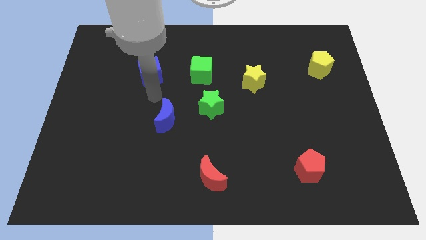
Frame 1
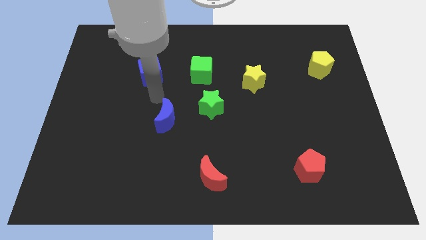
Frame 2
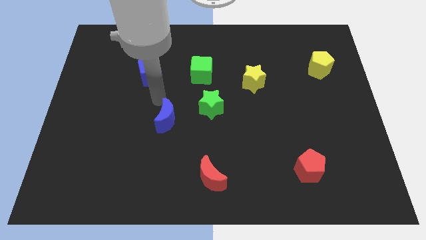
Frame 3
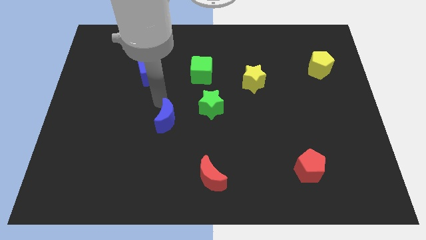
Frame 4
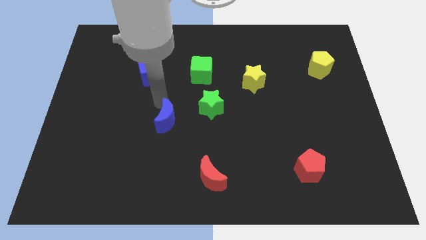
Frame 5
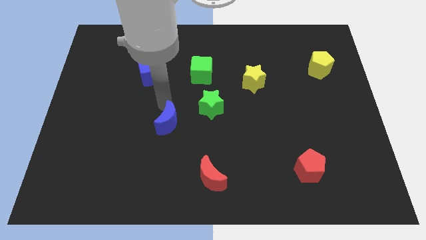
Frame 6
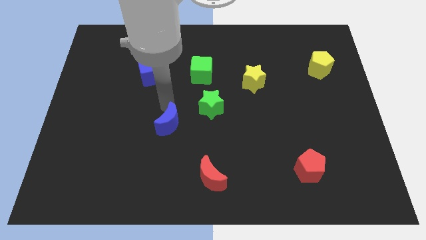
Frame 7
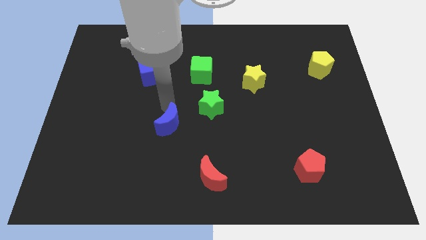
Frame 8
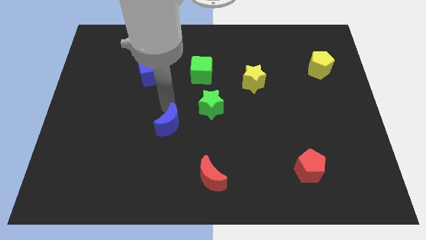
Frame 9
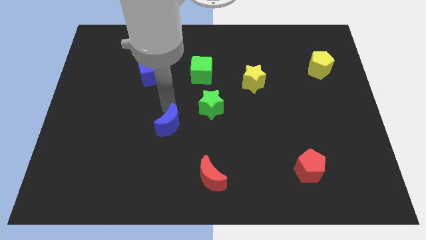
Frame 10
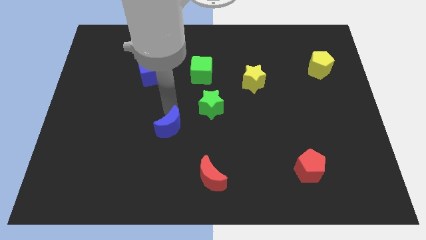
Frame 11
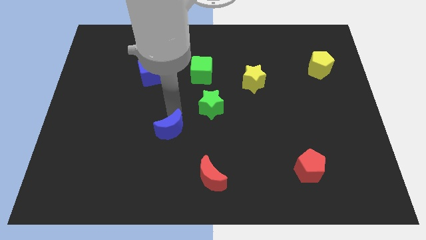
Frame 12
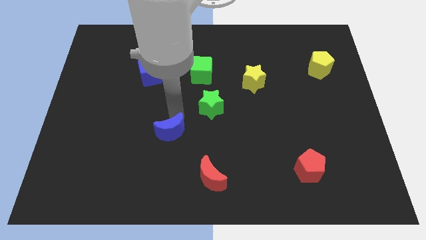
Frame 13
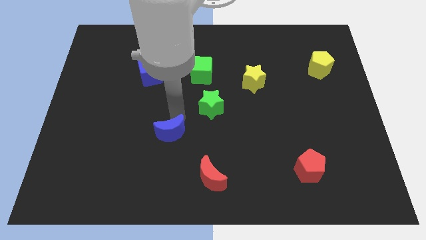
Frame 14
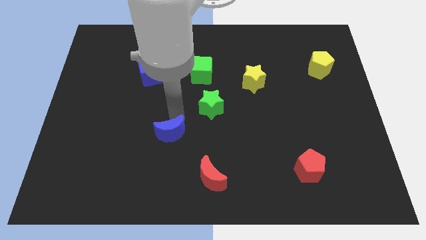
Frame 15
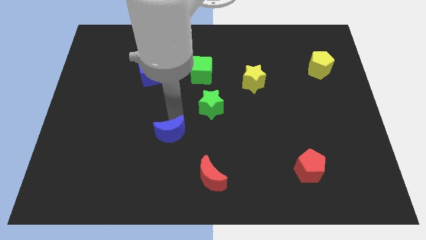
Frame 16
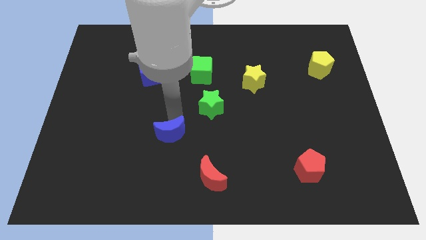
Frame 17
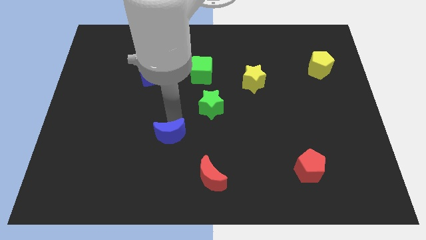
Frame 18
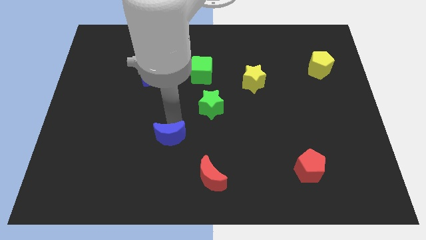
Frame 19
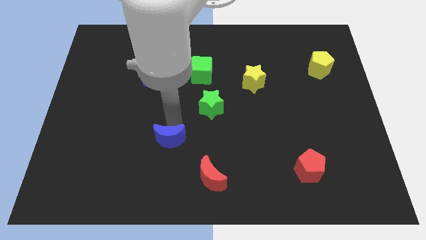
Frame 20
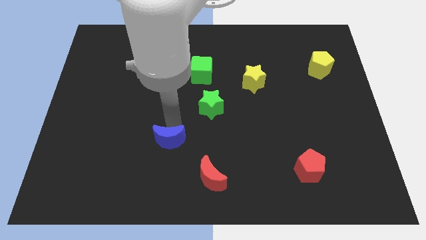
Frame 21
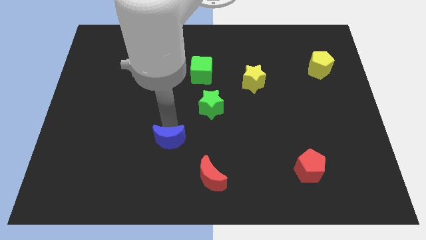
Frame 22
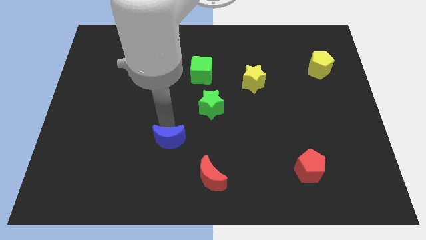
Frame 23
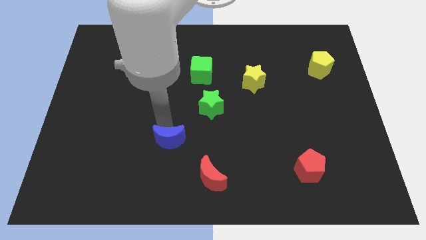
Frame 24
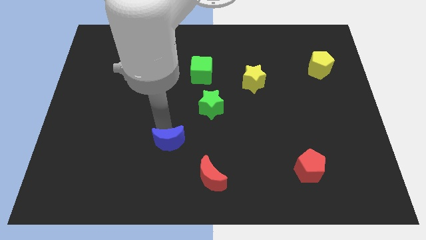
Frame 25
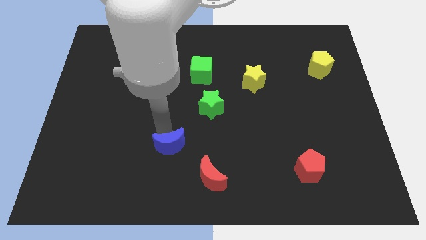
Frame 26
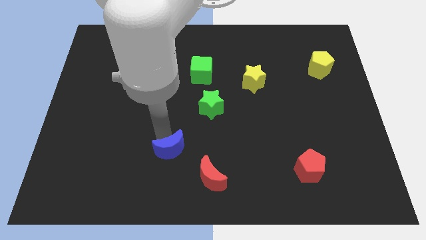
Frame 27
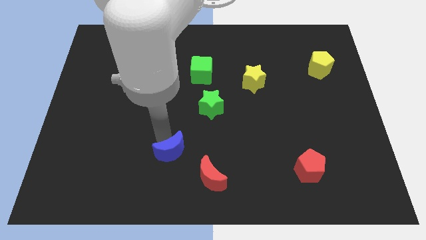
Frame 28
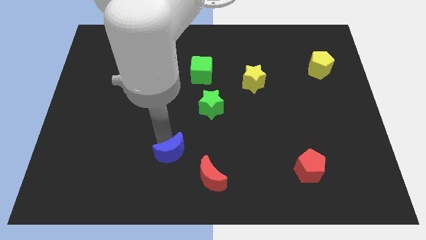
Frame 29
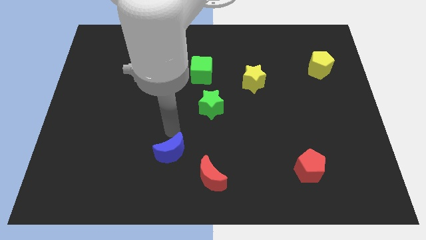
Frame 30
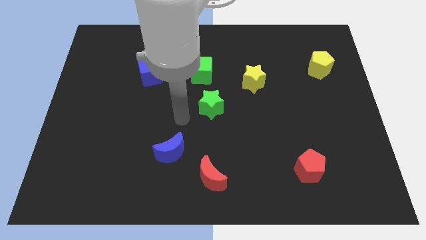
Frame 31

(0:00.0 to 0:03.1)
place blue moon diagonal to the red moon

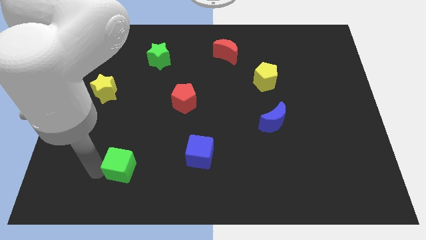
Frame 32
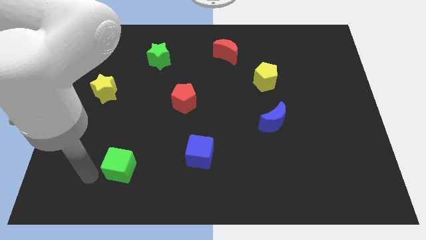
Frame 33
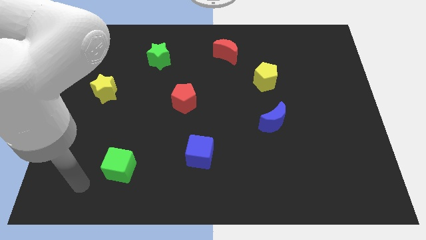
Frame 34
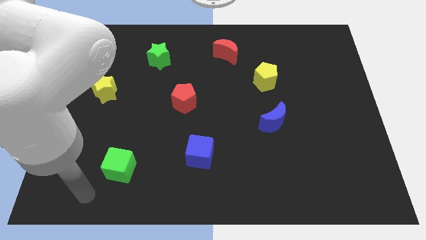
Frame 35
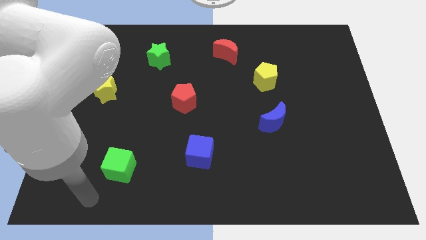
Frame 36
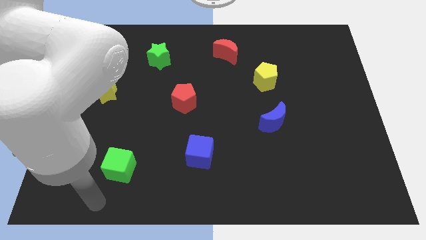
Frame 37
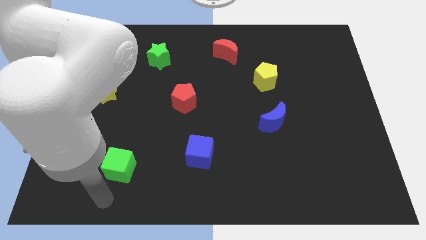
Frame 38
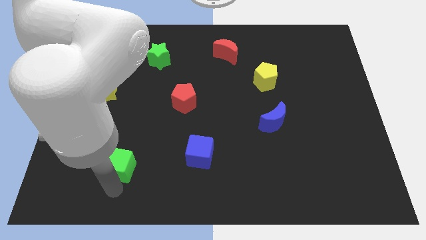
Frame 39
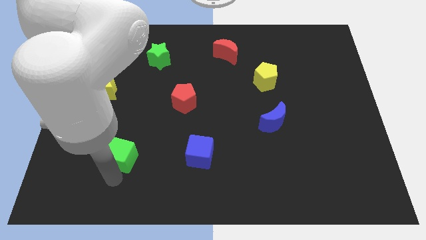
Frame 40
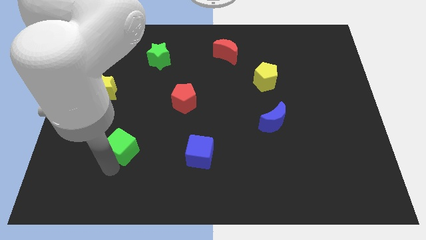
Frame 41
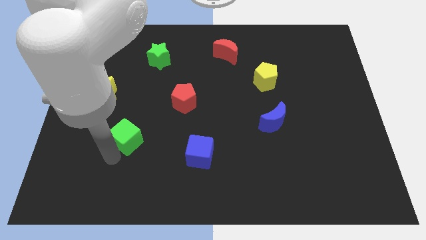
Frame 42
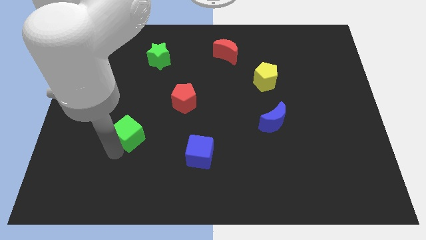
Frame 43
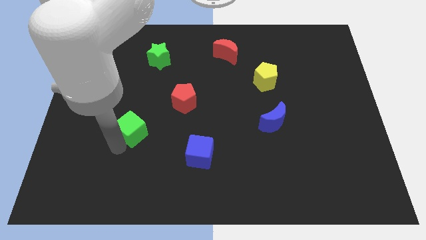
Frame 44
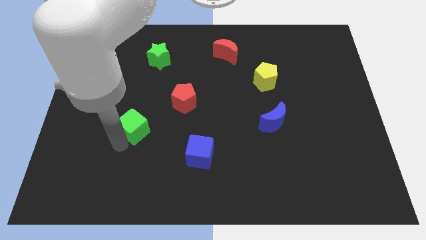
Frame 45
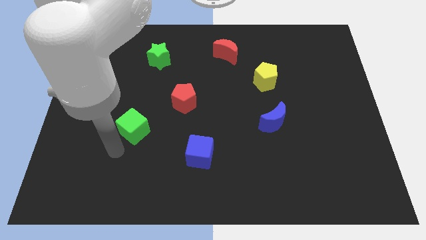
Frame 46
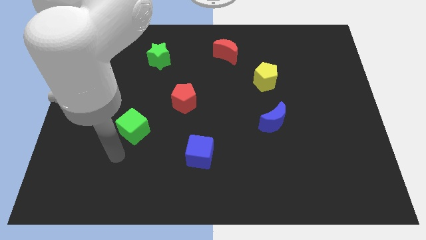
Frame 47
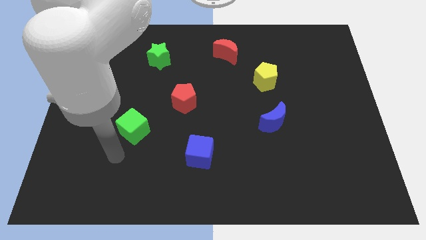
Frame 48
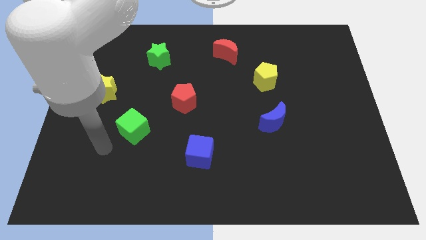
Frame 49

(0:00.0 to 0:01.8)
push the green cube towards red pentagon

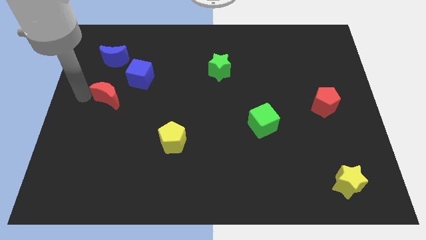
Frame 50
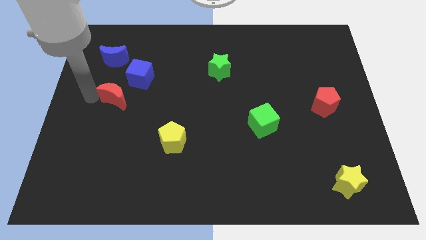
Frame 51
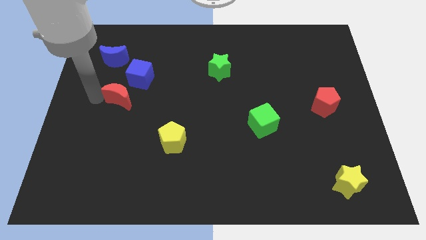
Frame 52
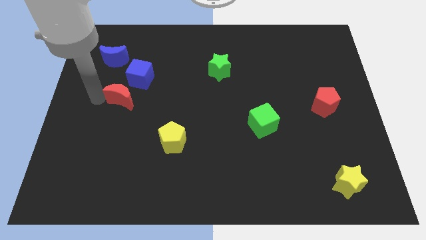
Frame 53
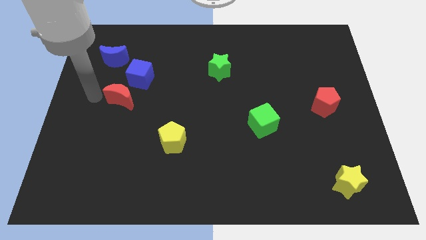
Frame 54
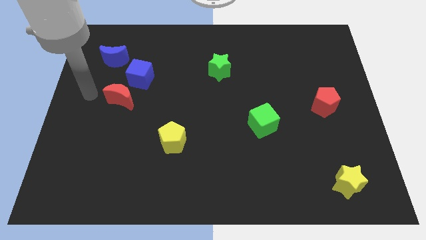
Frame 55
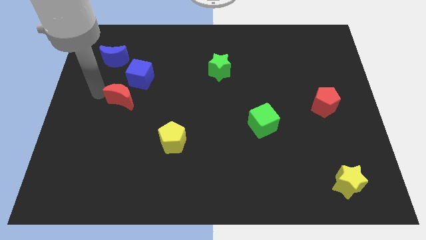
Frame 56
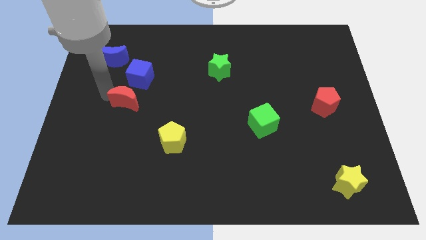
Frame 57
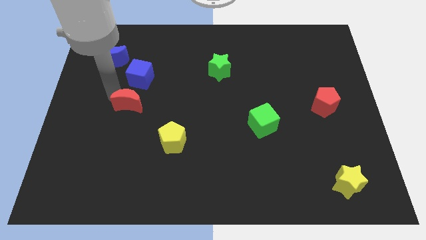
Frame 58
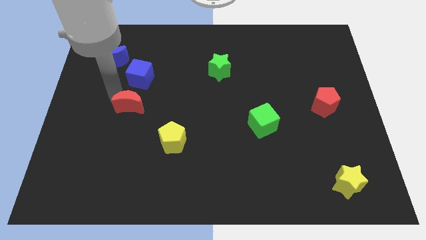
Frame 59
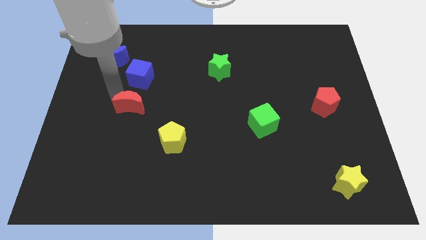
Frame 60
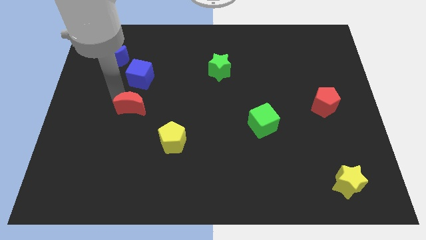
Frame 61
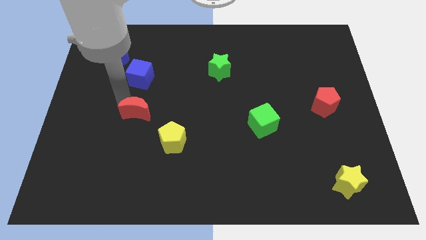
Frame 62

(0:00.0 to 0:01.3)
place the red moon below the blue cube

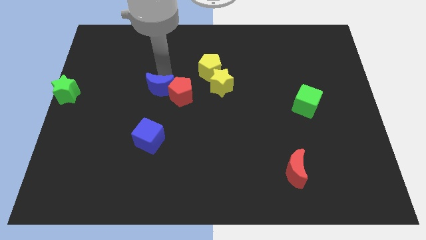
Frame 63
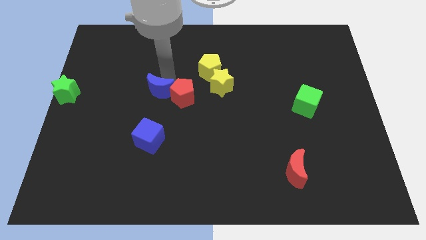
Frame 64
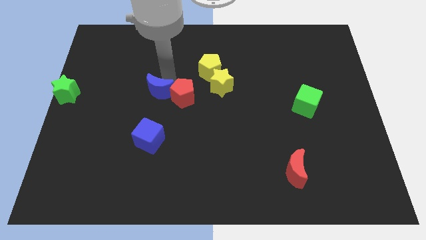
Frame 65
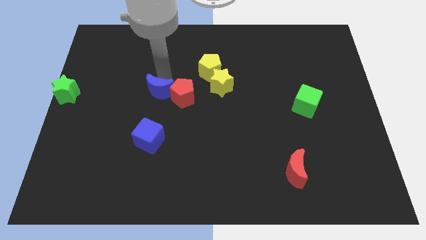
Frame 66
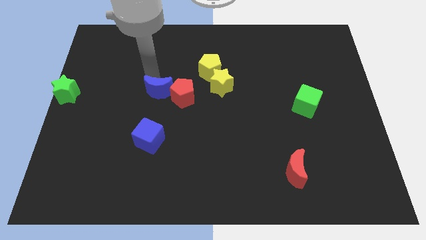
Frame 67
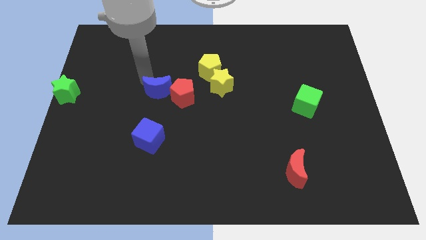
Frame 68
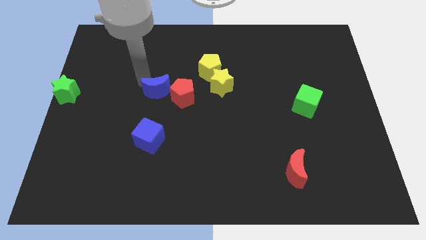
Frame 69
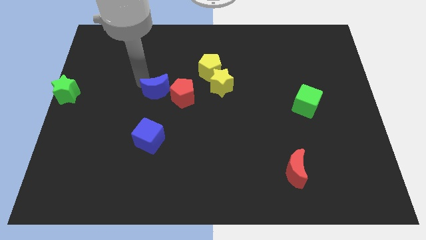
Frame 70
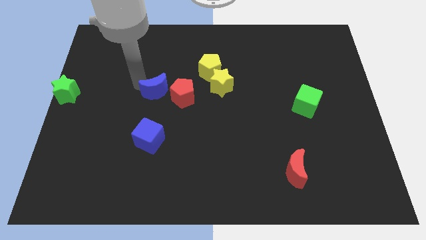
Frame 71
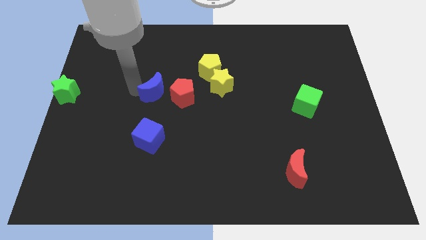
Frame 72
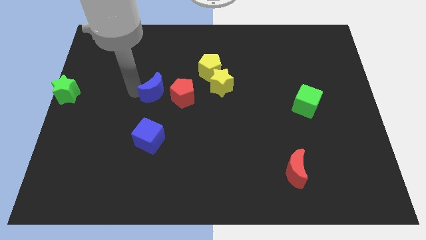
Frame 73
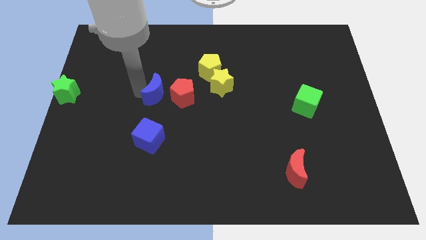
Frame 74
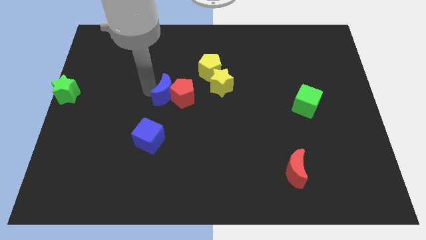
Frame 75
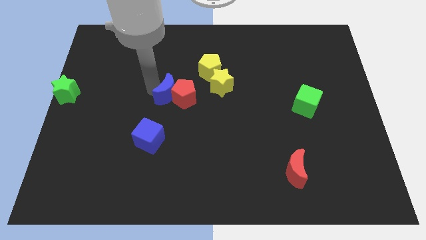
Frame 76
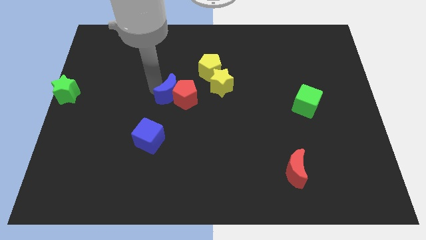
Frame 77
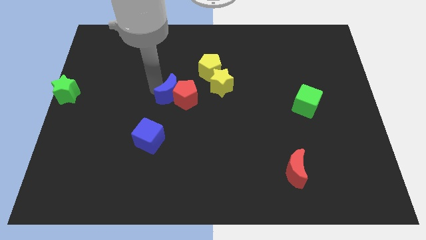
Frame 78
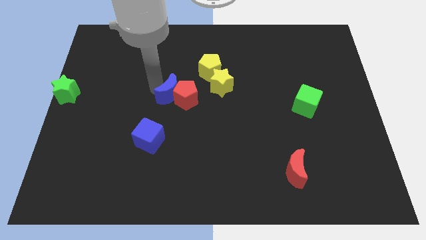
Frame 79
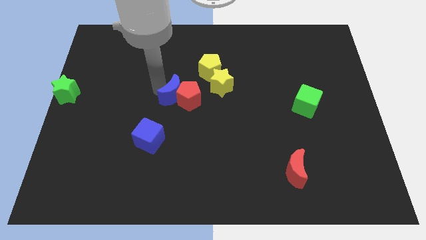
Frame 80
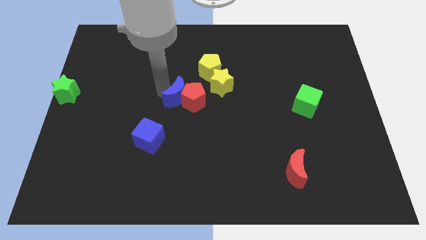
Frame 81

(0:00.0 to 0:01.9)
move the blue moon and red pentagon to the top right side of the blue cube

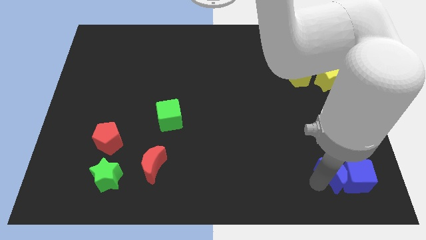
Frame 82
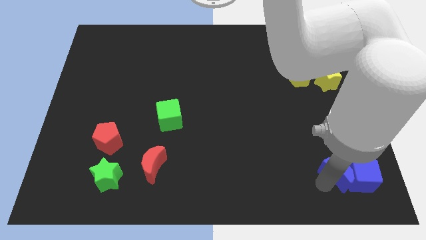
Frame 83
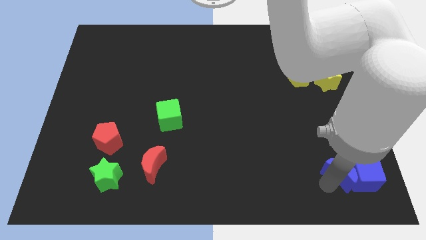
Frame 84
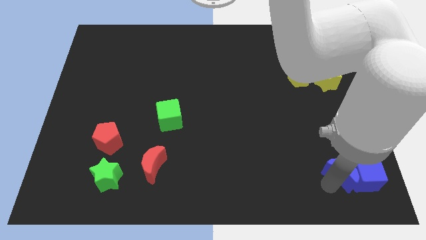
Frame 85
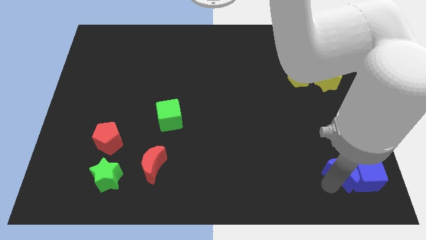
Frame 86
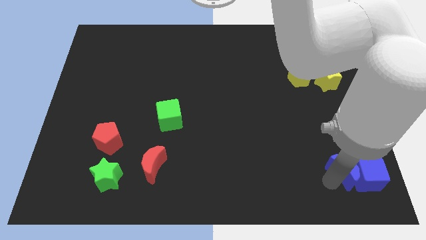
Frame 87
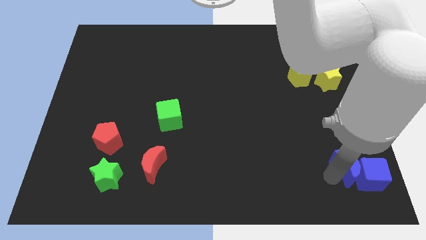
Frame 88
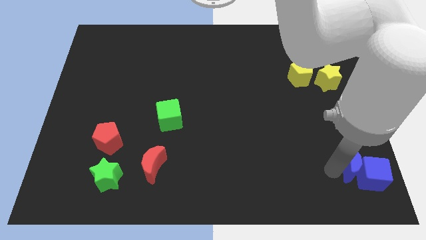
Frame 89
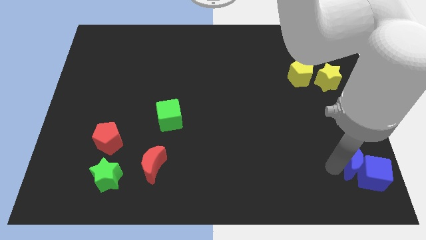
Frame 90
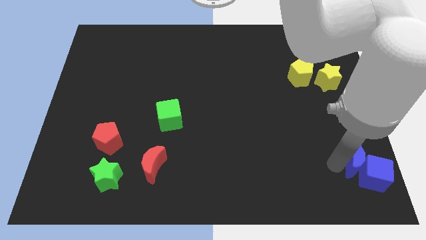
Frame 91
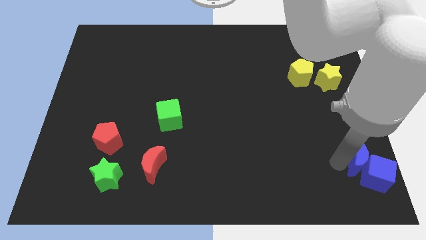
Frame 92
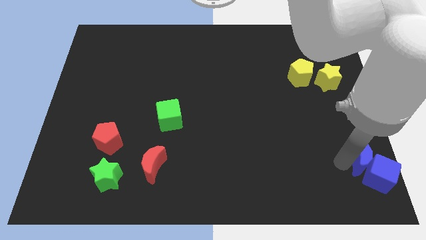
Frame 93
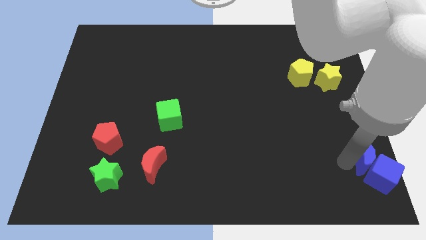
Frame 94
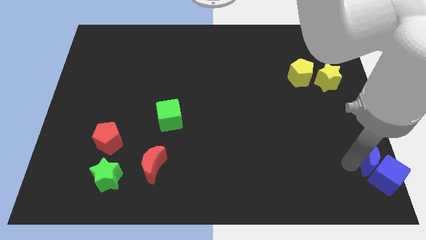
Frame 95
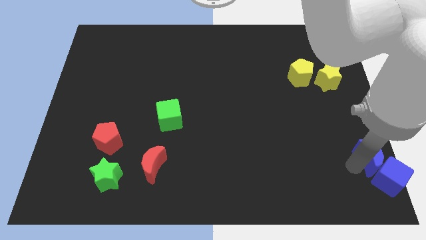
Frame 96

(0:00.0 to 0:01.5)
slightly push the blue blocks to the bottom right
